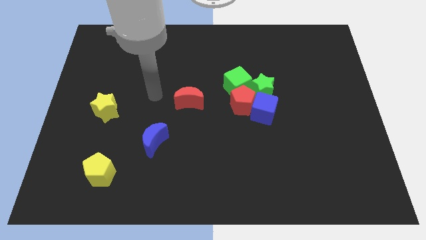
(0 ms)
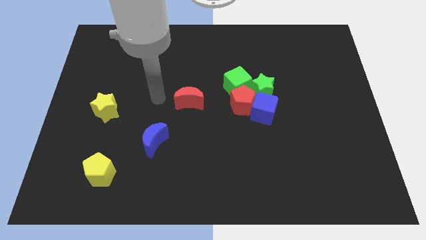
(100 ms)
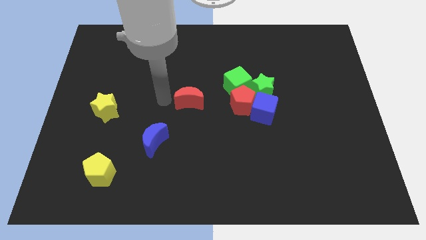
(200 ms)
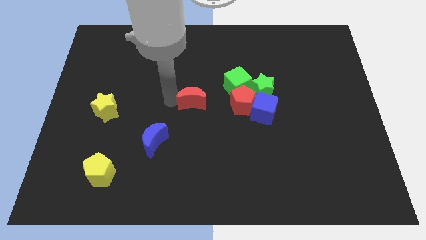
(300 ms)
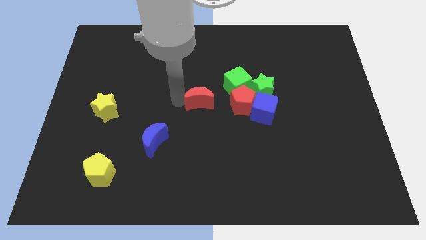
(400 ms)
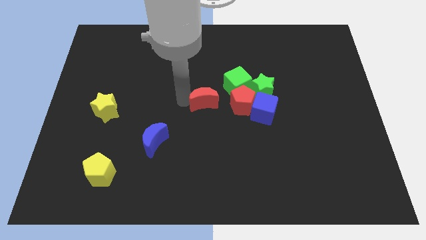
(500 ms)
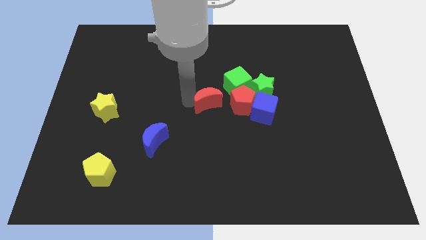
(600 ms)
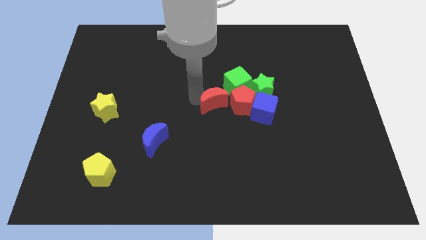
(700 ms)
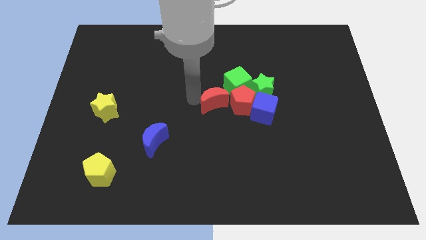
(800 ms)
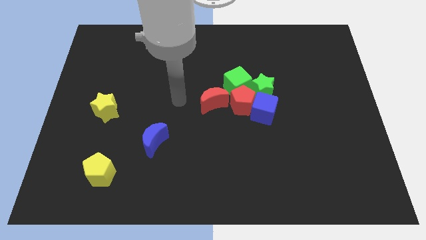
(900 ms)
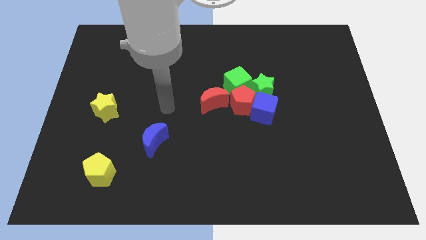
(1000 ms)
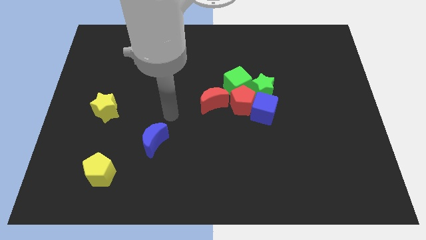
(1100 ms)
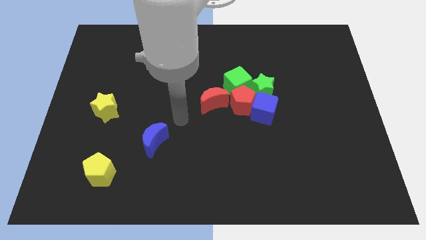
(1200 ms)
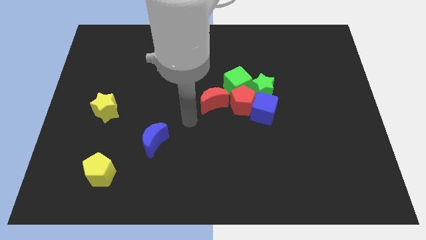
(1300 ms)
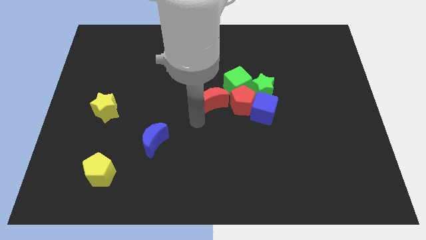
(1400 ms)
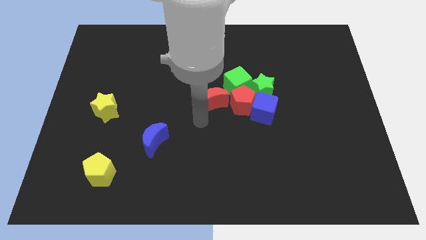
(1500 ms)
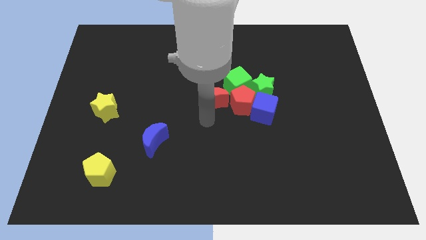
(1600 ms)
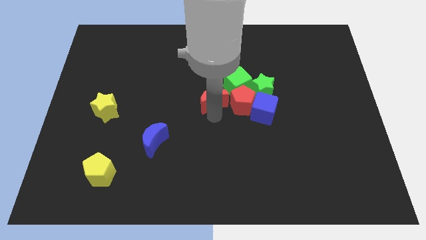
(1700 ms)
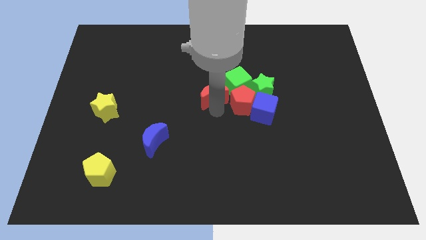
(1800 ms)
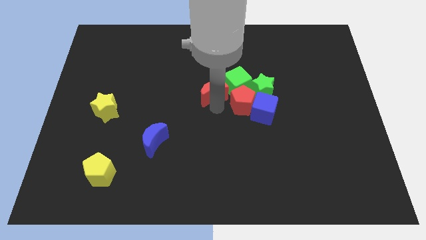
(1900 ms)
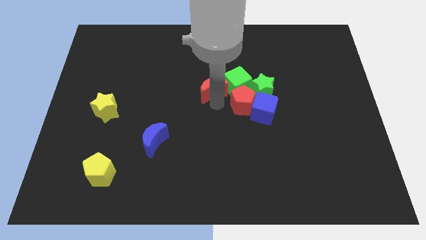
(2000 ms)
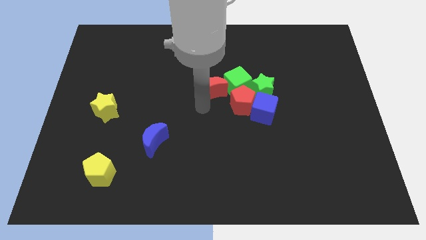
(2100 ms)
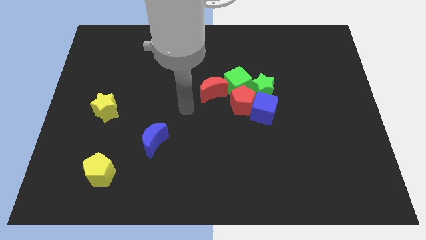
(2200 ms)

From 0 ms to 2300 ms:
put the red crescent into the green cube to the left

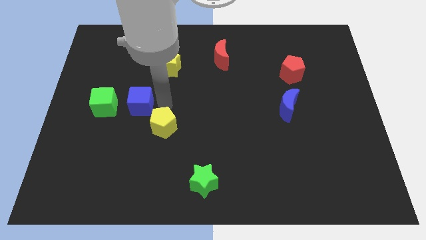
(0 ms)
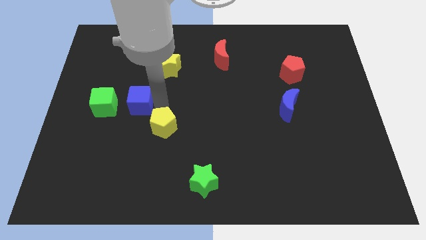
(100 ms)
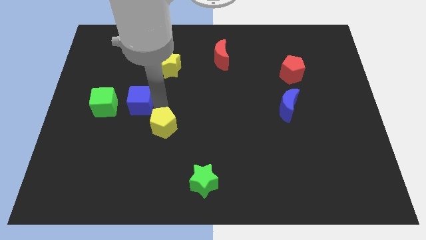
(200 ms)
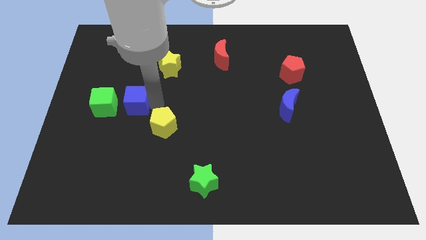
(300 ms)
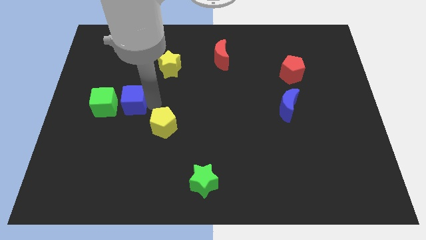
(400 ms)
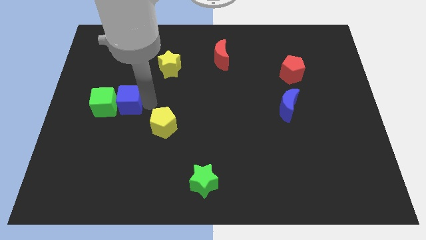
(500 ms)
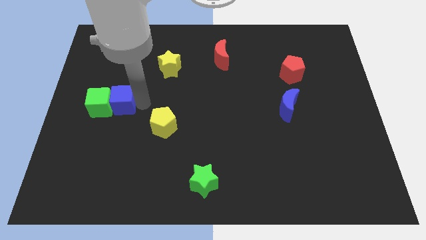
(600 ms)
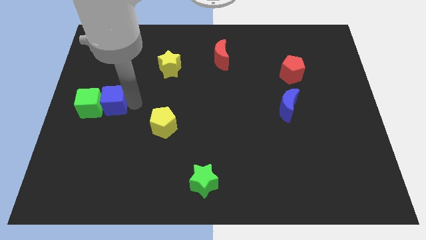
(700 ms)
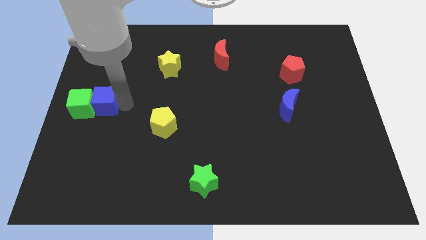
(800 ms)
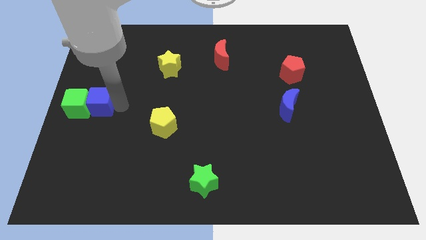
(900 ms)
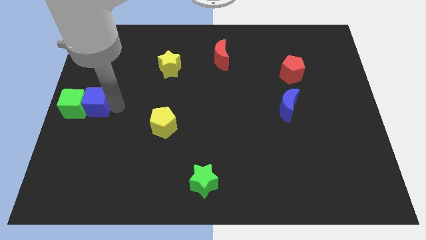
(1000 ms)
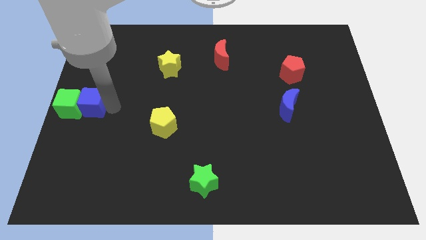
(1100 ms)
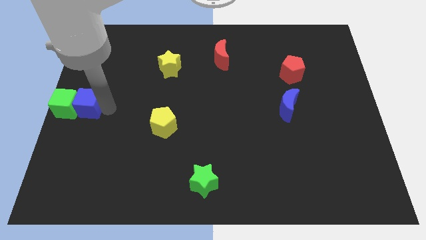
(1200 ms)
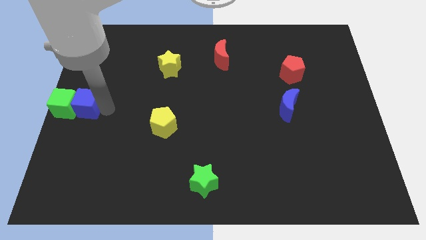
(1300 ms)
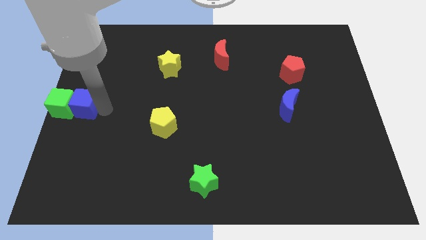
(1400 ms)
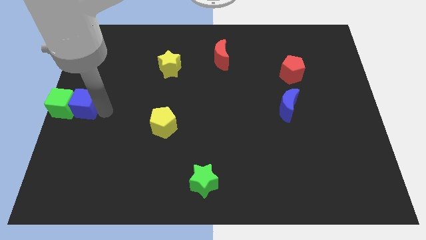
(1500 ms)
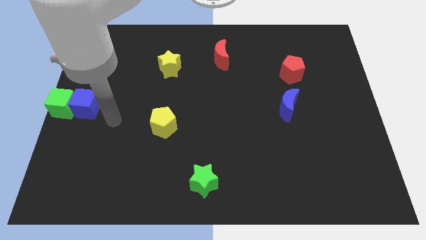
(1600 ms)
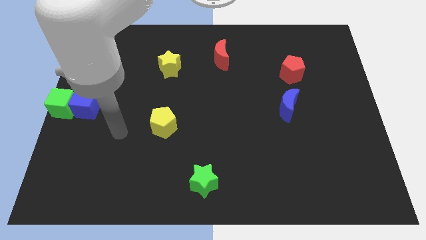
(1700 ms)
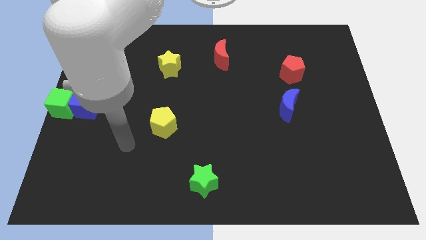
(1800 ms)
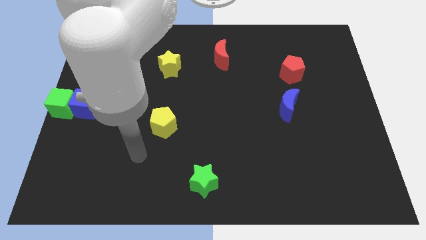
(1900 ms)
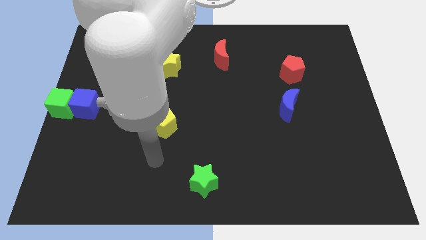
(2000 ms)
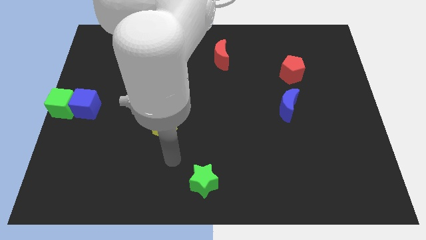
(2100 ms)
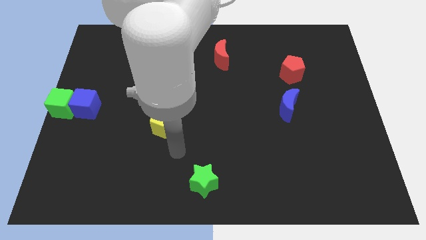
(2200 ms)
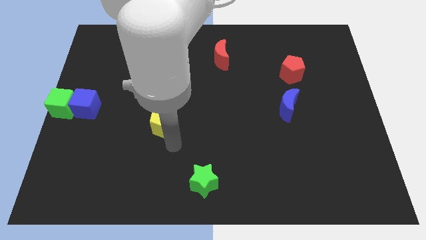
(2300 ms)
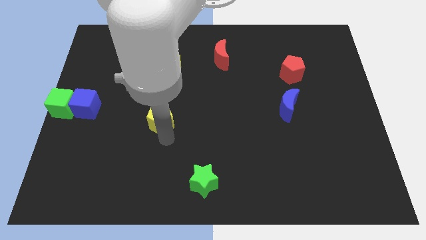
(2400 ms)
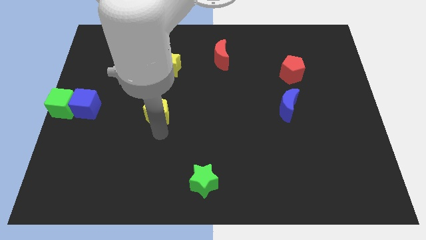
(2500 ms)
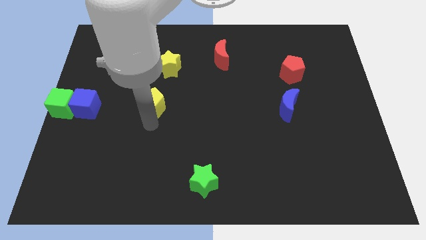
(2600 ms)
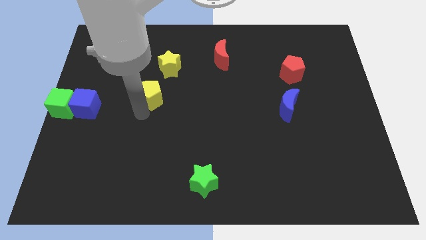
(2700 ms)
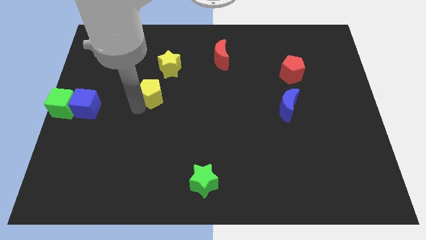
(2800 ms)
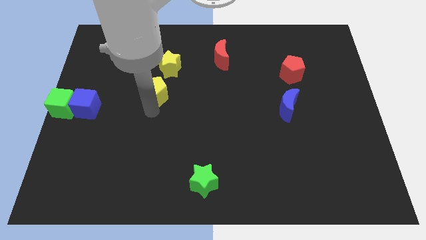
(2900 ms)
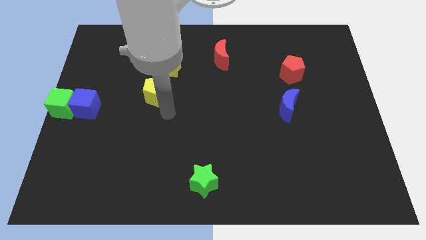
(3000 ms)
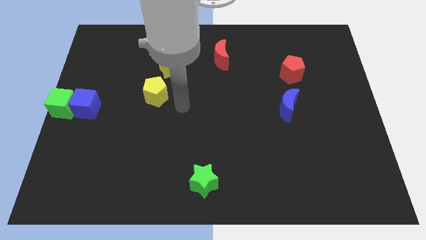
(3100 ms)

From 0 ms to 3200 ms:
place the yellow pentagon diagonally top right to the blue cube

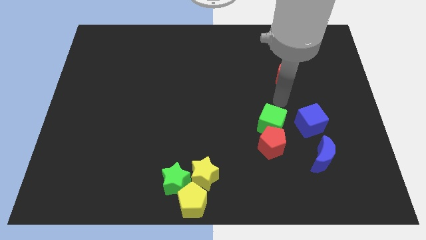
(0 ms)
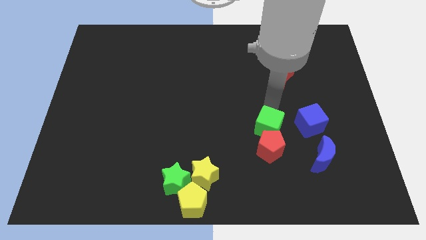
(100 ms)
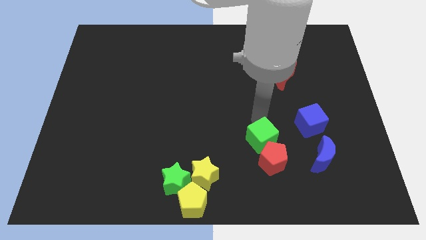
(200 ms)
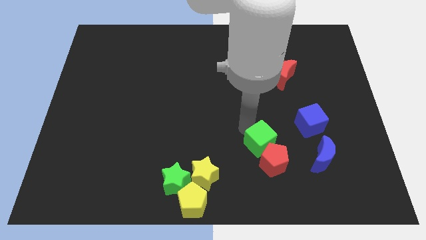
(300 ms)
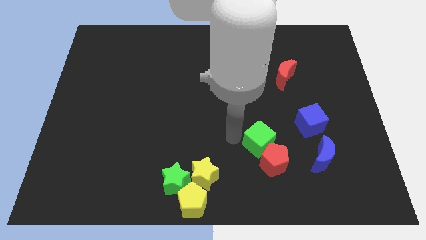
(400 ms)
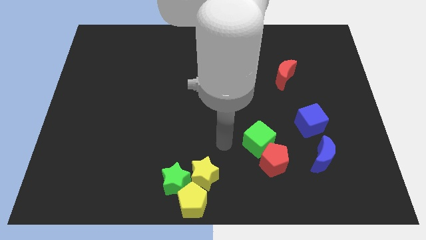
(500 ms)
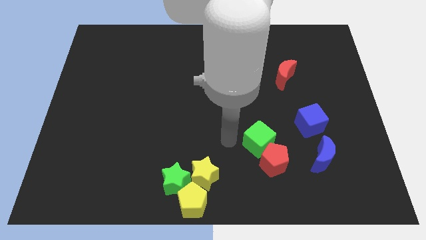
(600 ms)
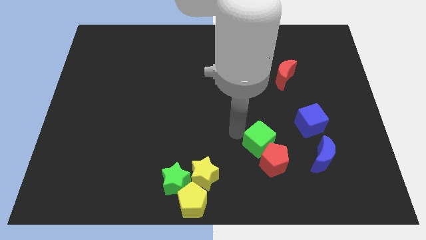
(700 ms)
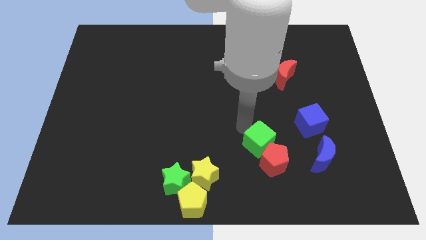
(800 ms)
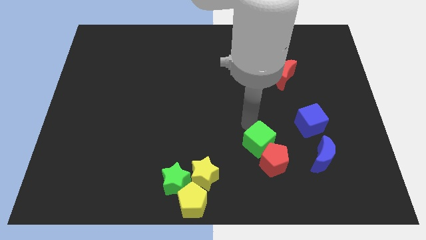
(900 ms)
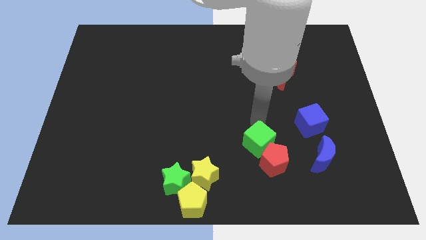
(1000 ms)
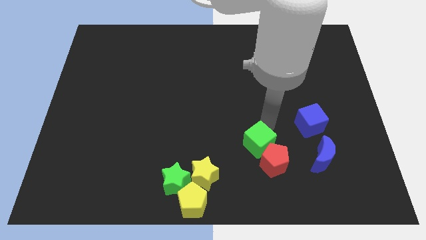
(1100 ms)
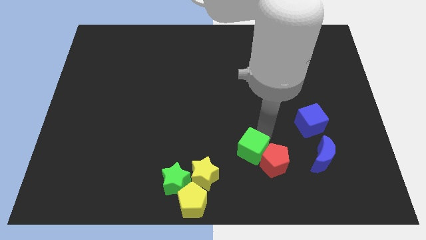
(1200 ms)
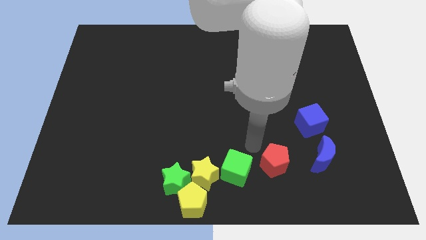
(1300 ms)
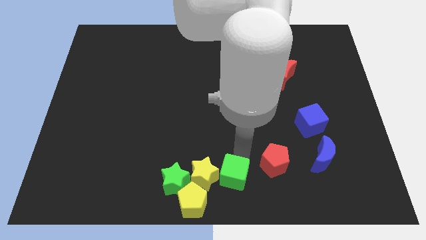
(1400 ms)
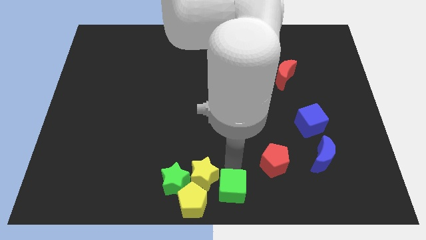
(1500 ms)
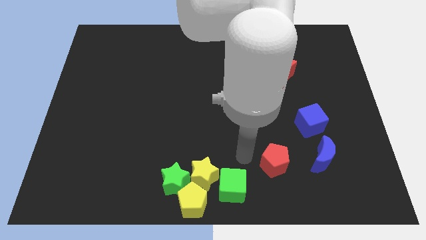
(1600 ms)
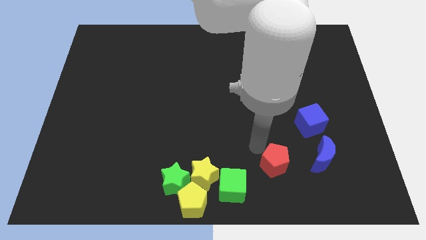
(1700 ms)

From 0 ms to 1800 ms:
place green cube to the right of yellow star

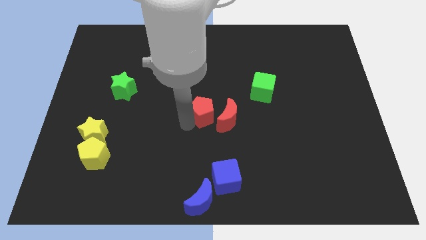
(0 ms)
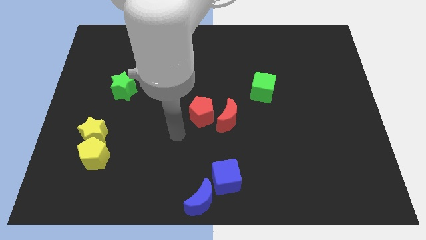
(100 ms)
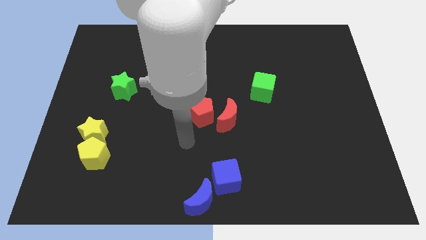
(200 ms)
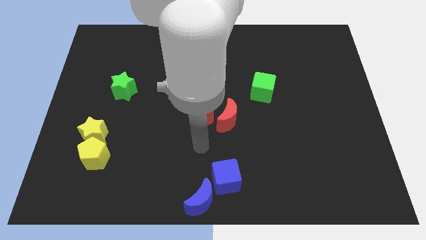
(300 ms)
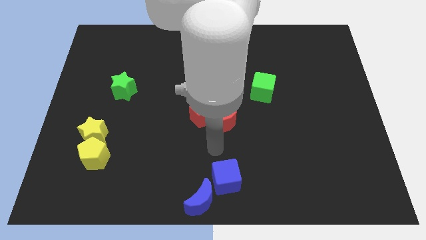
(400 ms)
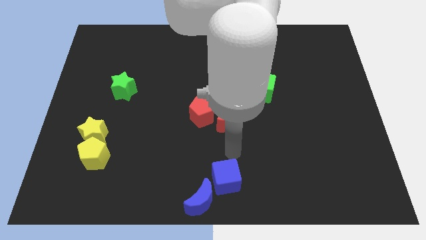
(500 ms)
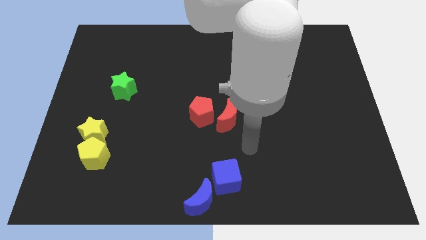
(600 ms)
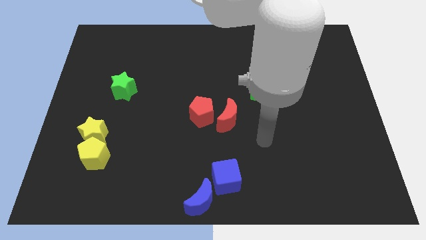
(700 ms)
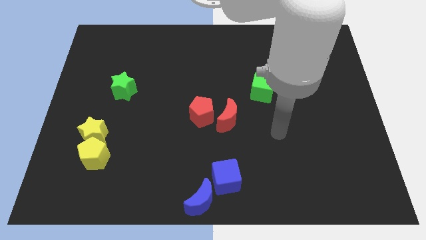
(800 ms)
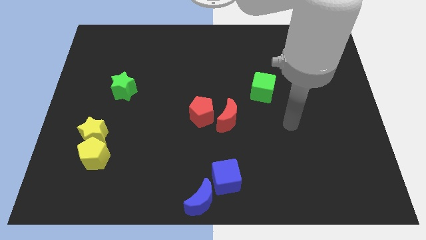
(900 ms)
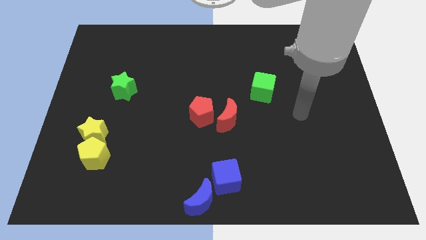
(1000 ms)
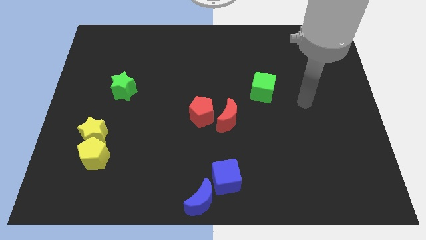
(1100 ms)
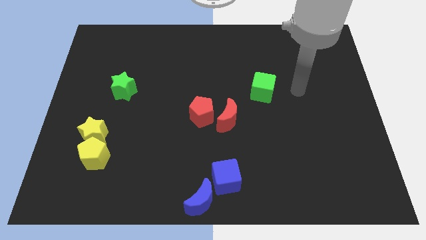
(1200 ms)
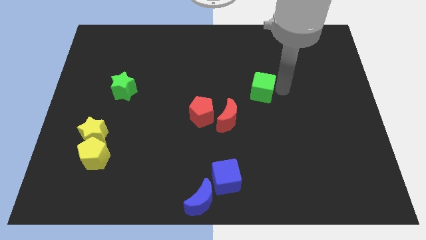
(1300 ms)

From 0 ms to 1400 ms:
move your arm to the right side of the green cube

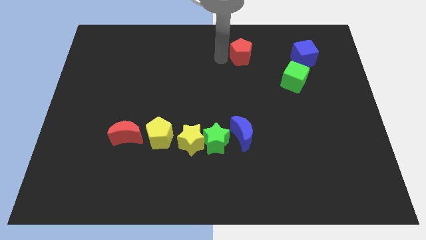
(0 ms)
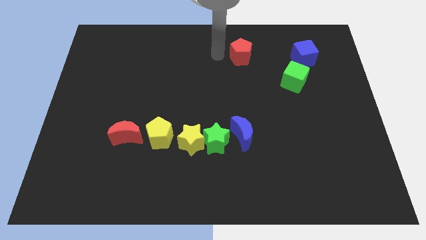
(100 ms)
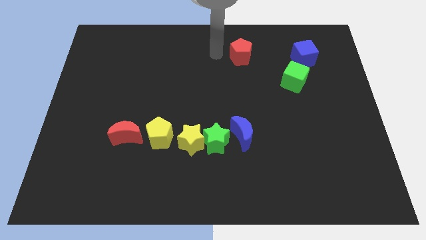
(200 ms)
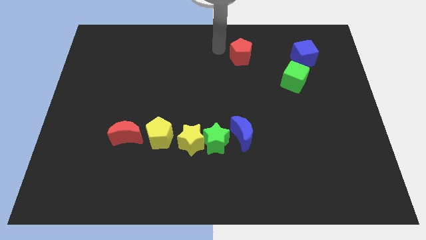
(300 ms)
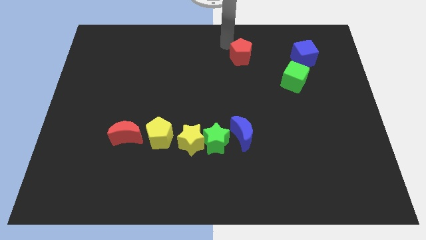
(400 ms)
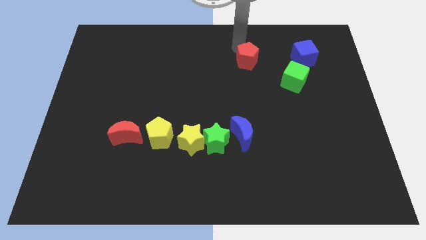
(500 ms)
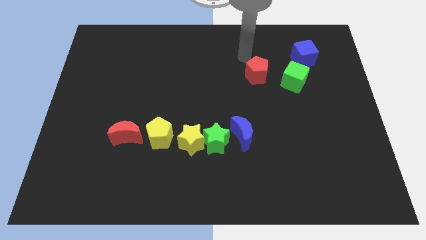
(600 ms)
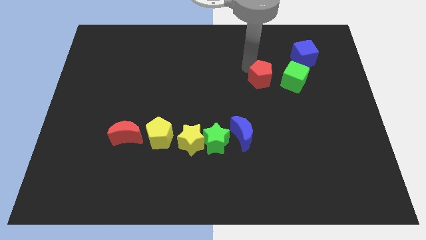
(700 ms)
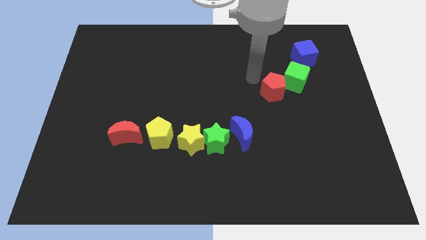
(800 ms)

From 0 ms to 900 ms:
move the red pentagon to the left of the green cube
